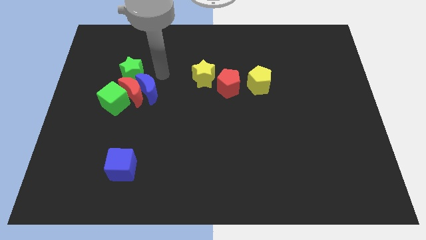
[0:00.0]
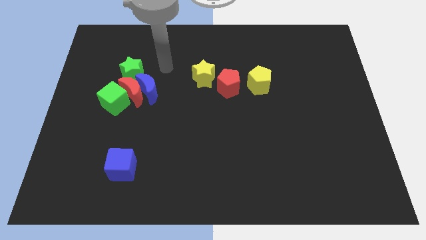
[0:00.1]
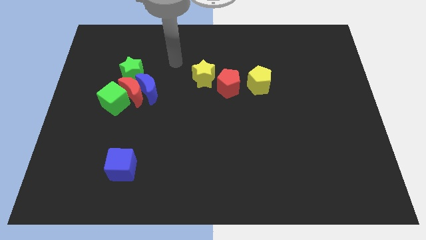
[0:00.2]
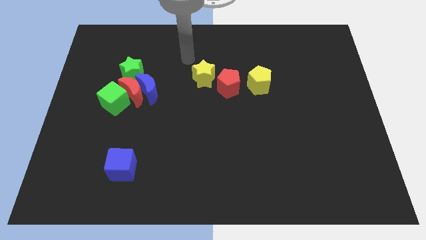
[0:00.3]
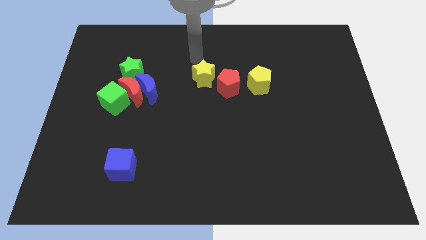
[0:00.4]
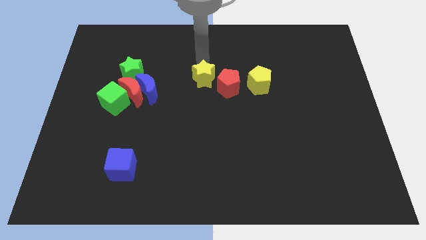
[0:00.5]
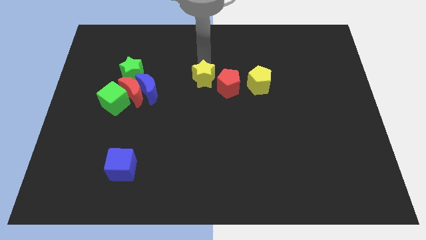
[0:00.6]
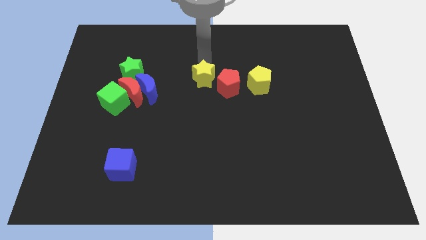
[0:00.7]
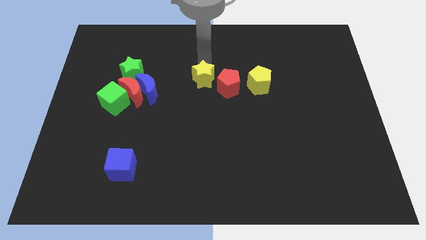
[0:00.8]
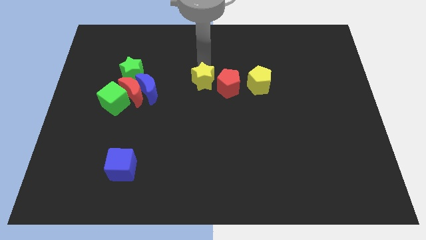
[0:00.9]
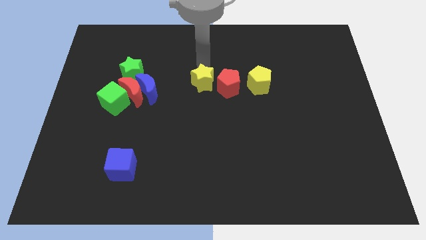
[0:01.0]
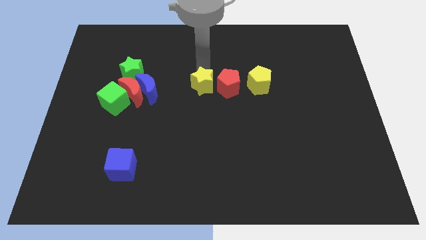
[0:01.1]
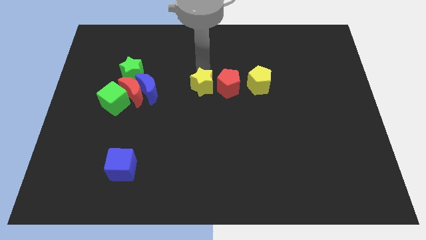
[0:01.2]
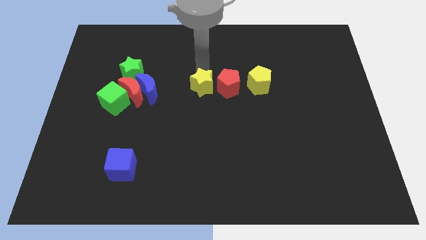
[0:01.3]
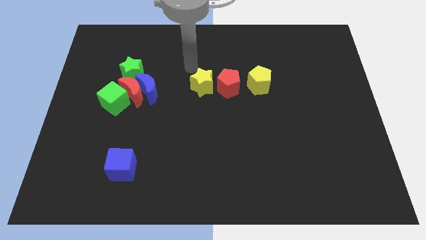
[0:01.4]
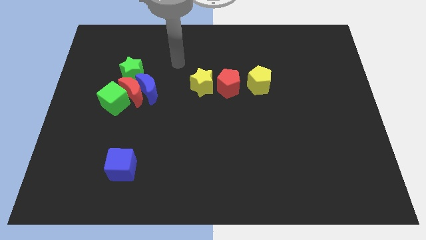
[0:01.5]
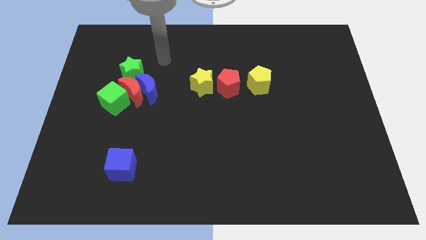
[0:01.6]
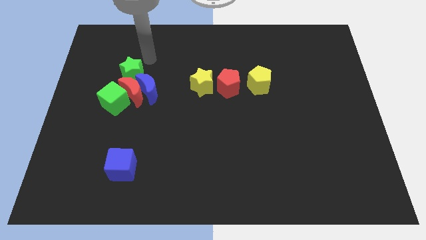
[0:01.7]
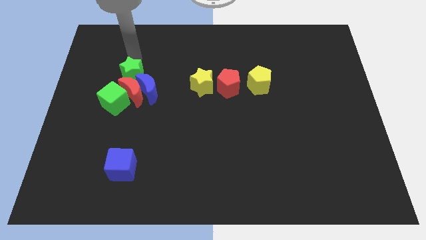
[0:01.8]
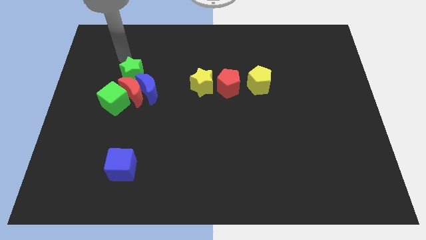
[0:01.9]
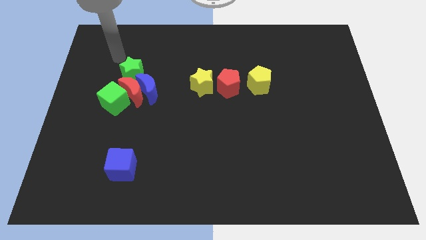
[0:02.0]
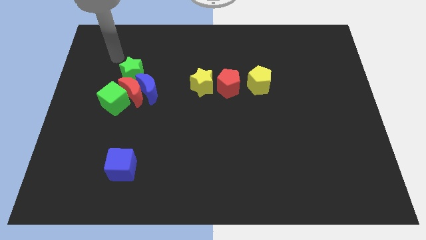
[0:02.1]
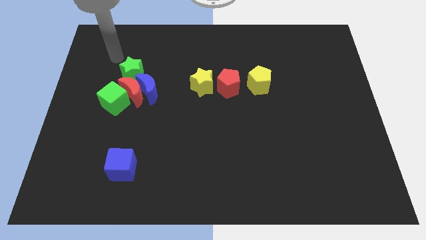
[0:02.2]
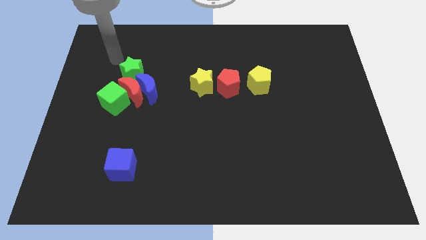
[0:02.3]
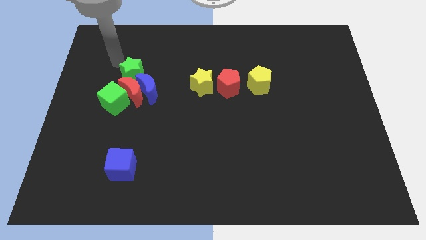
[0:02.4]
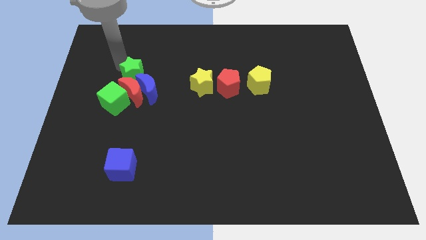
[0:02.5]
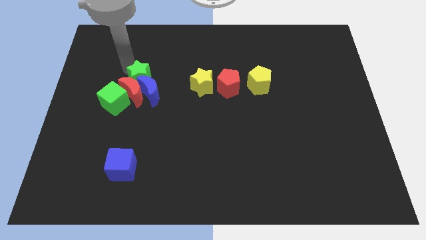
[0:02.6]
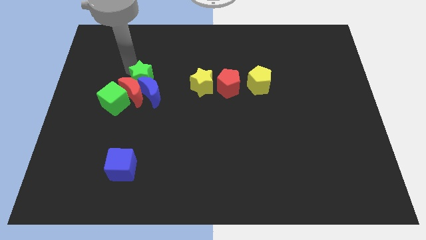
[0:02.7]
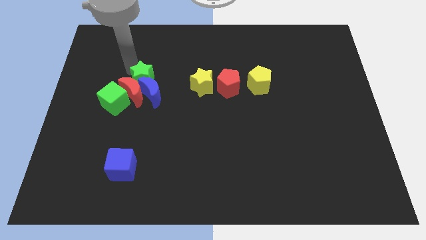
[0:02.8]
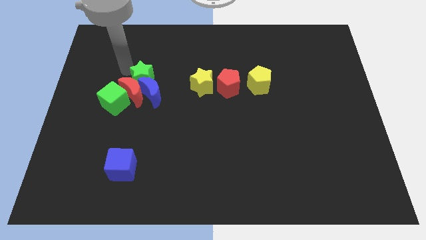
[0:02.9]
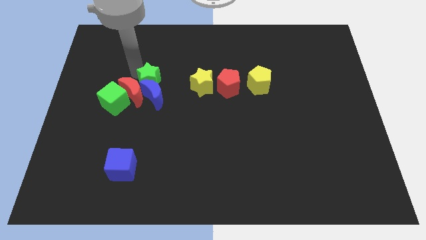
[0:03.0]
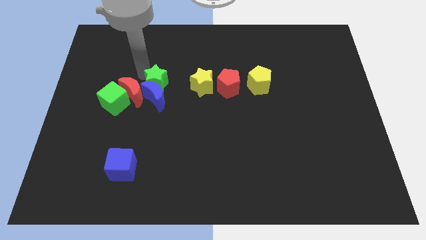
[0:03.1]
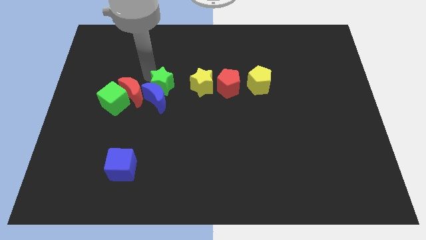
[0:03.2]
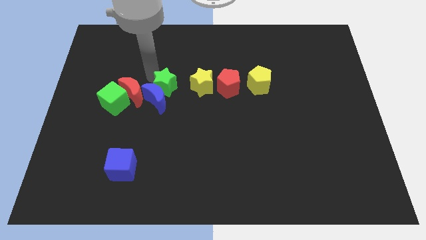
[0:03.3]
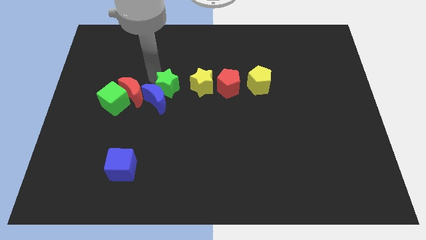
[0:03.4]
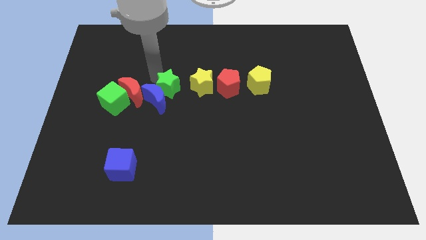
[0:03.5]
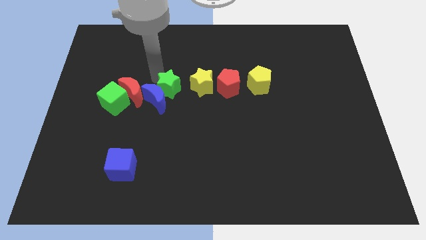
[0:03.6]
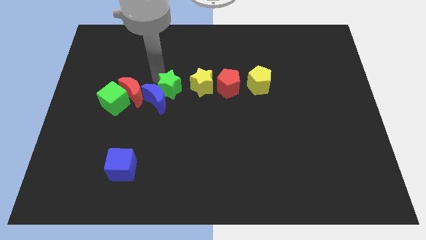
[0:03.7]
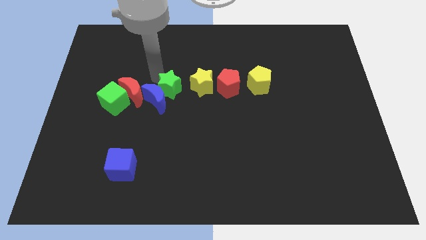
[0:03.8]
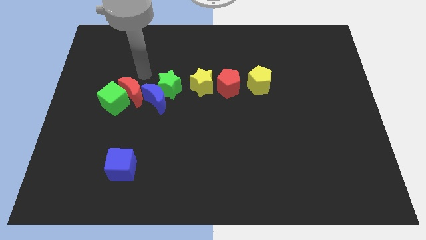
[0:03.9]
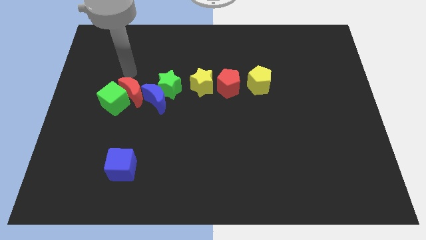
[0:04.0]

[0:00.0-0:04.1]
move the stars to the left of the red pentagon

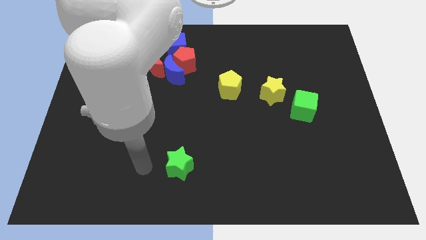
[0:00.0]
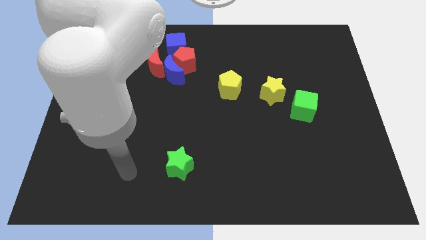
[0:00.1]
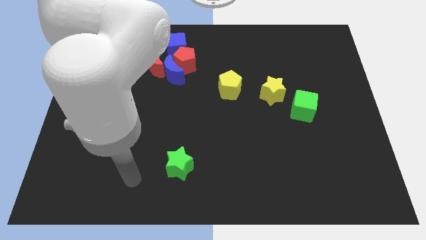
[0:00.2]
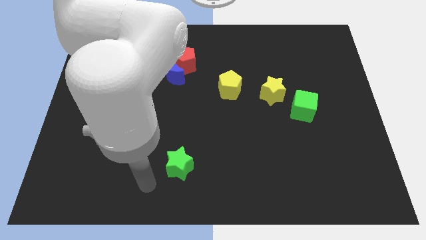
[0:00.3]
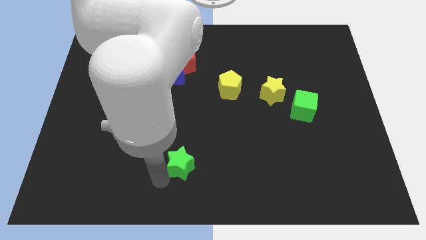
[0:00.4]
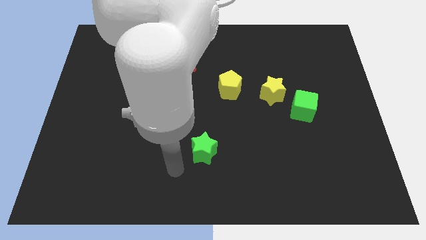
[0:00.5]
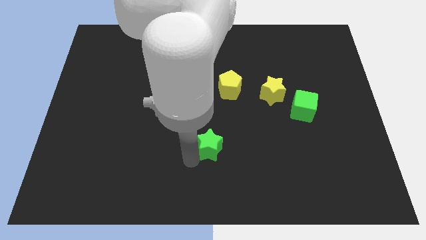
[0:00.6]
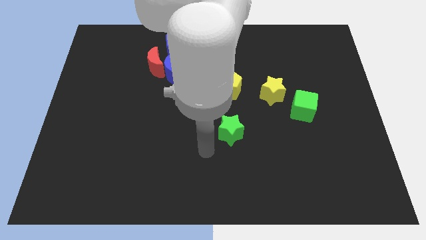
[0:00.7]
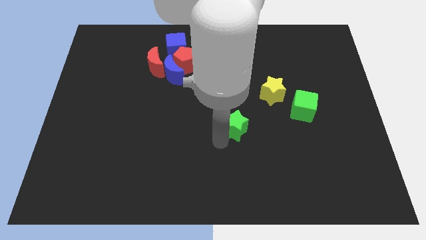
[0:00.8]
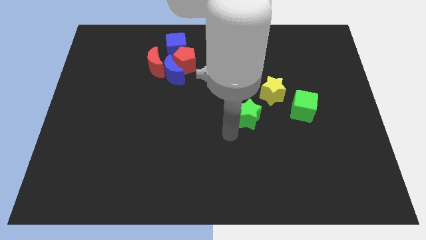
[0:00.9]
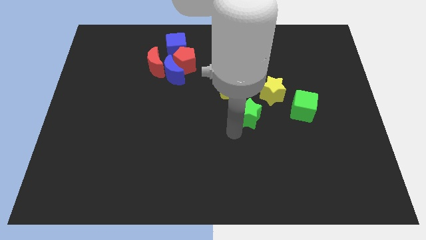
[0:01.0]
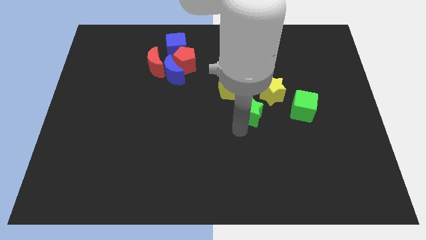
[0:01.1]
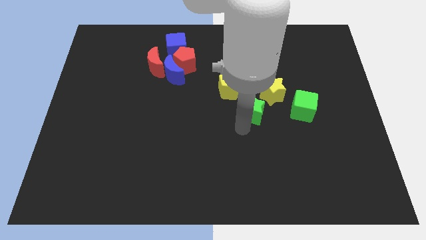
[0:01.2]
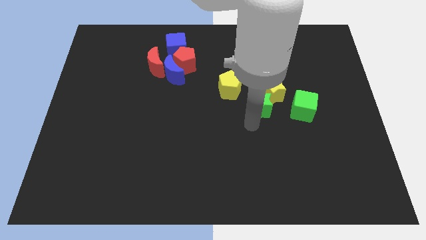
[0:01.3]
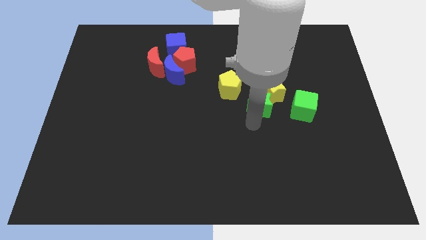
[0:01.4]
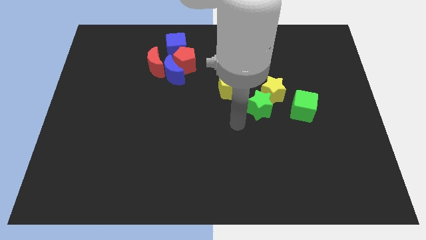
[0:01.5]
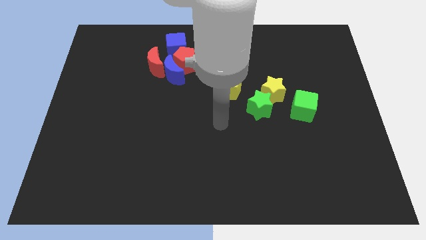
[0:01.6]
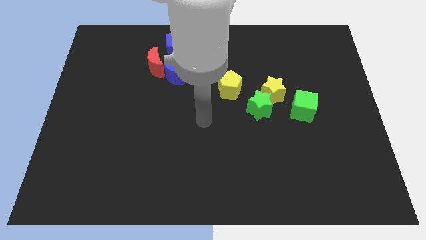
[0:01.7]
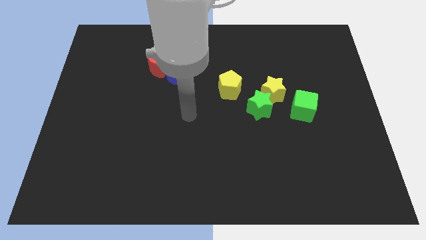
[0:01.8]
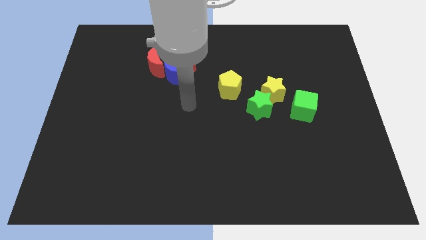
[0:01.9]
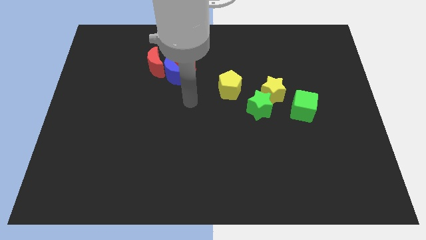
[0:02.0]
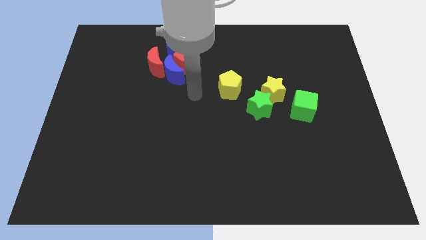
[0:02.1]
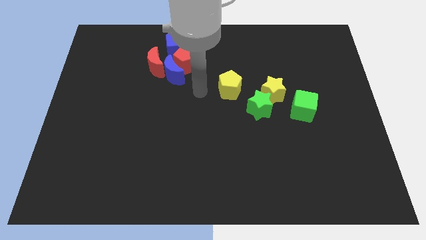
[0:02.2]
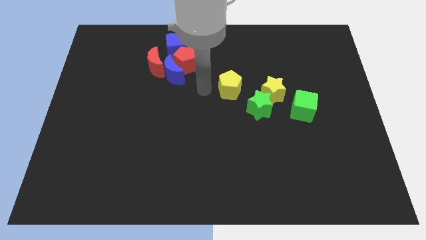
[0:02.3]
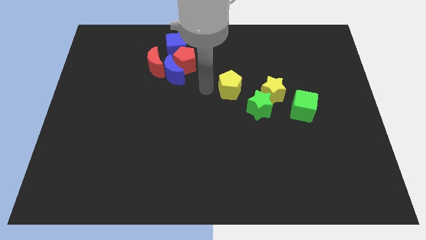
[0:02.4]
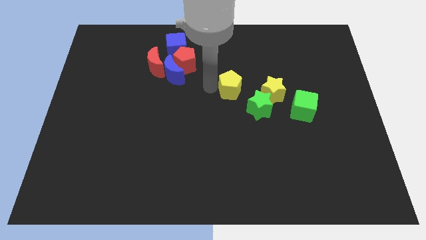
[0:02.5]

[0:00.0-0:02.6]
place the green star below the yellow star

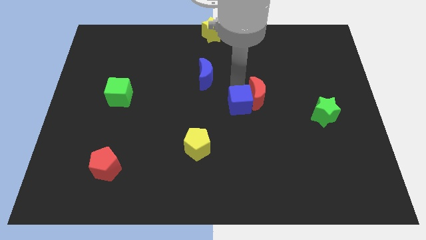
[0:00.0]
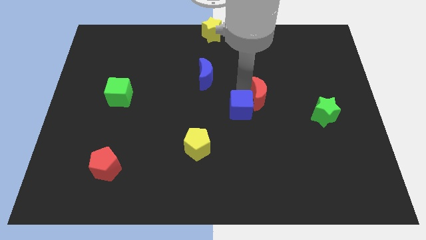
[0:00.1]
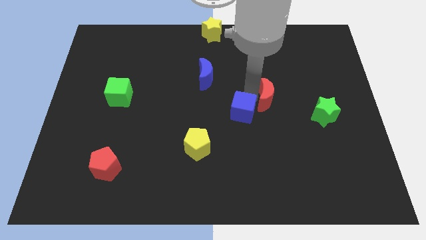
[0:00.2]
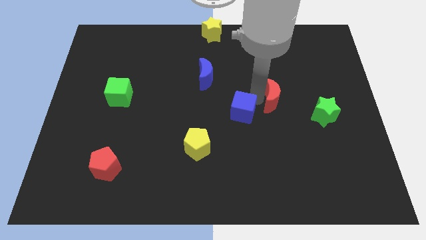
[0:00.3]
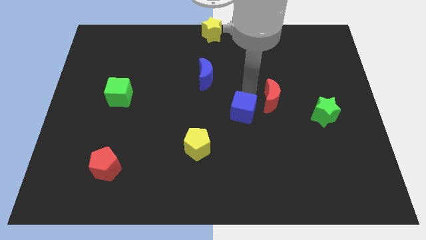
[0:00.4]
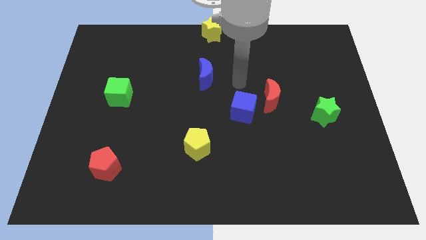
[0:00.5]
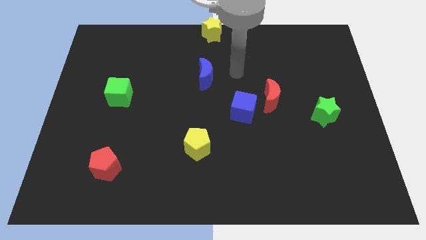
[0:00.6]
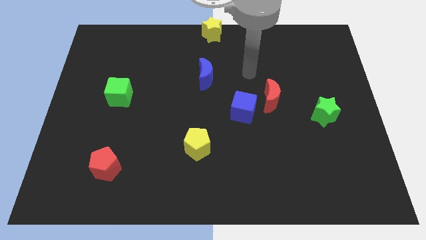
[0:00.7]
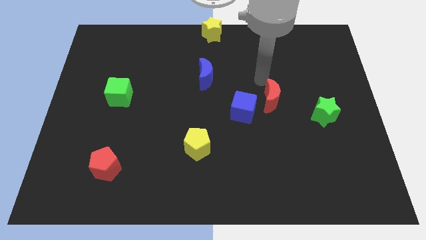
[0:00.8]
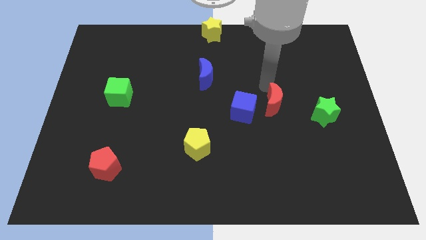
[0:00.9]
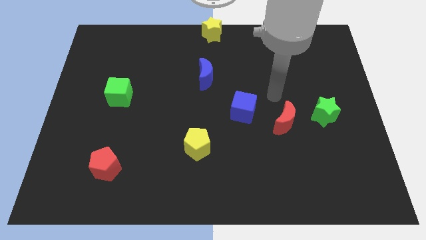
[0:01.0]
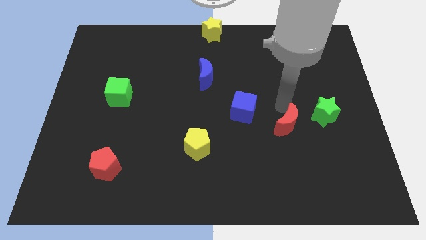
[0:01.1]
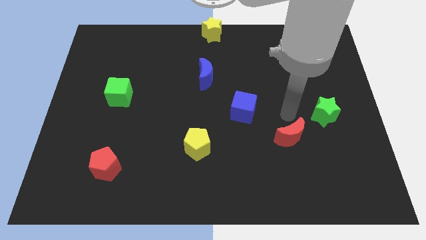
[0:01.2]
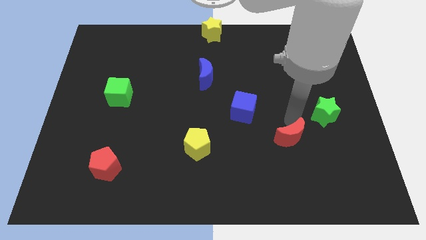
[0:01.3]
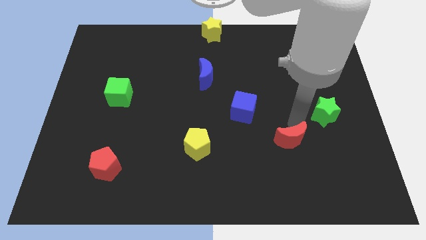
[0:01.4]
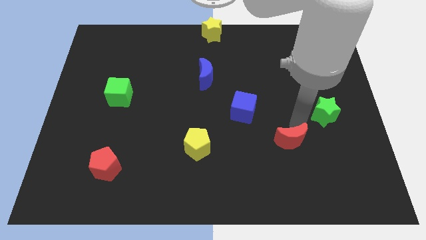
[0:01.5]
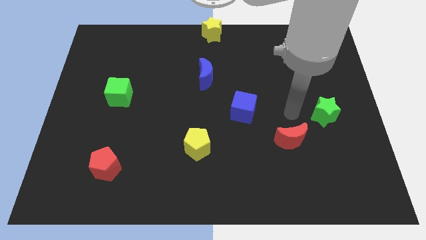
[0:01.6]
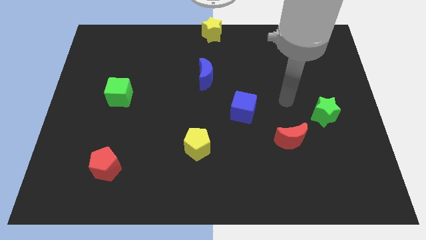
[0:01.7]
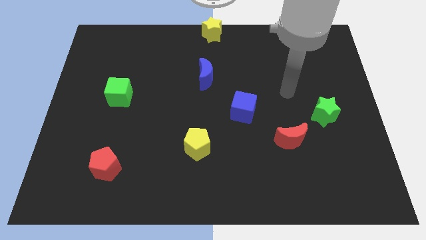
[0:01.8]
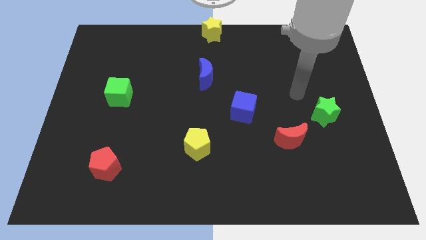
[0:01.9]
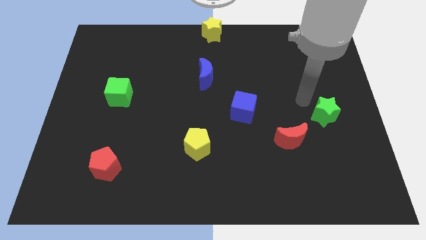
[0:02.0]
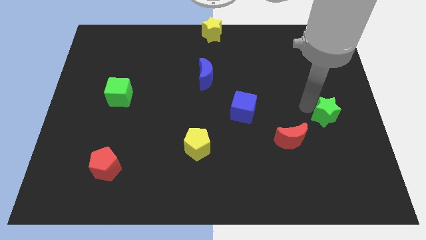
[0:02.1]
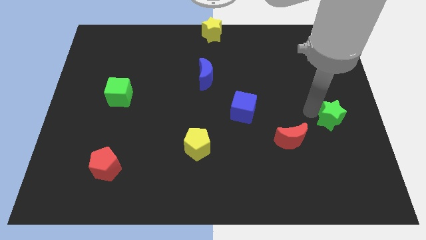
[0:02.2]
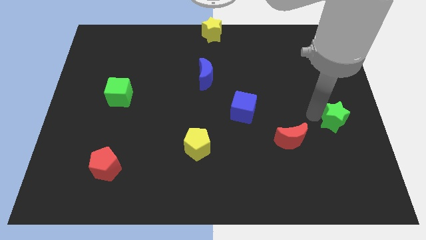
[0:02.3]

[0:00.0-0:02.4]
move the red crescent slightly down

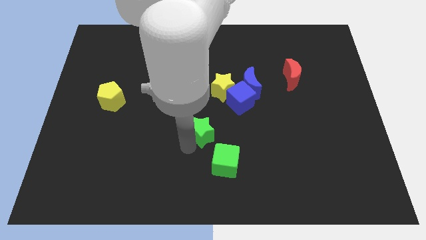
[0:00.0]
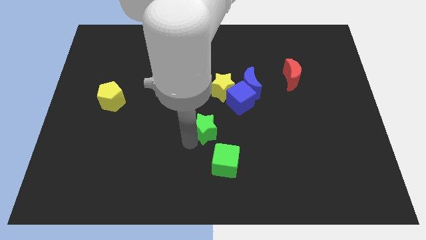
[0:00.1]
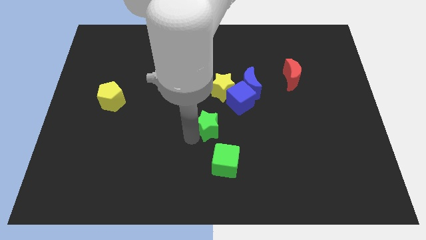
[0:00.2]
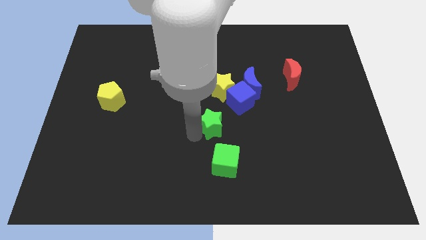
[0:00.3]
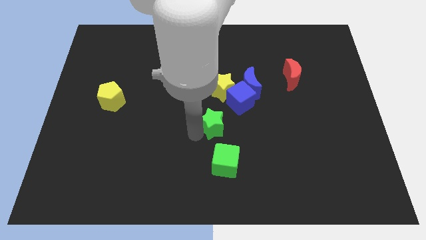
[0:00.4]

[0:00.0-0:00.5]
slightly move the green star to the center of the board
